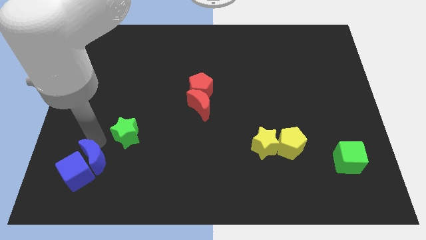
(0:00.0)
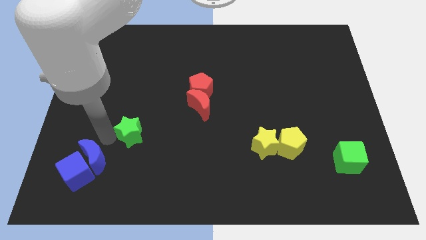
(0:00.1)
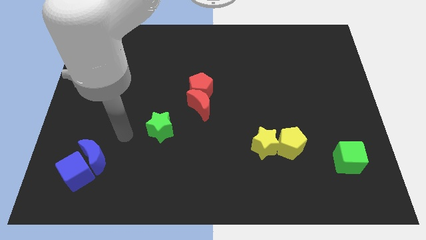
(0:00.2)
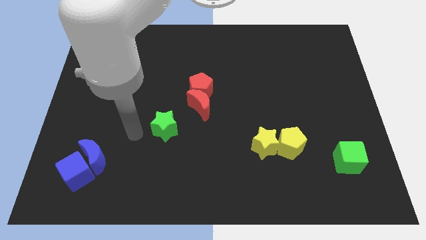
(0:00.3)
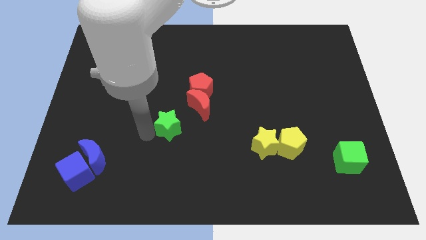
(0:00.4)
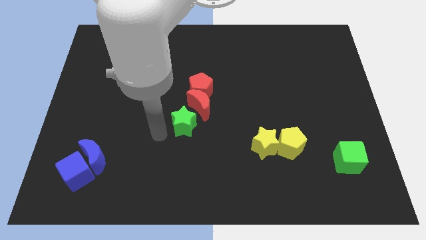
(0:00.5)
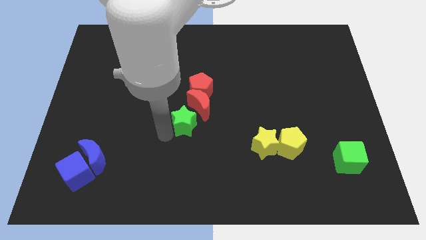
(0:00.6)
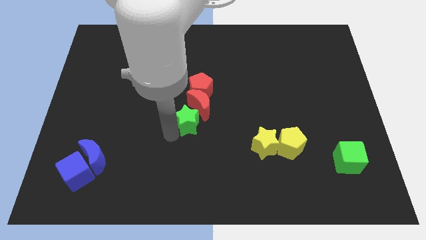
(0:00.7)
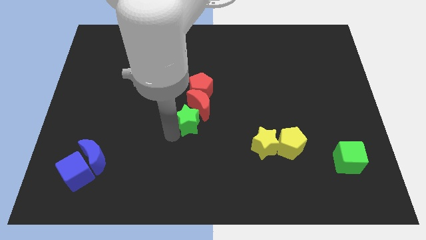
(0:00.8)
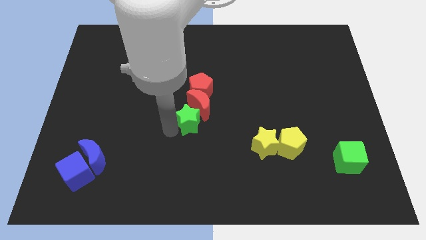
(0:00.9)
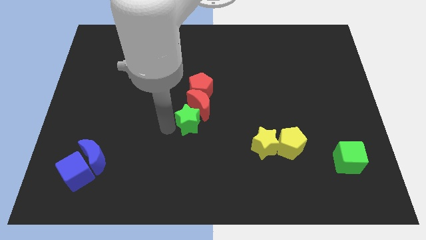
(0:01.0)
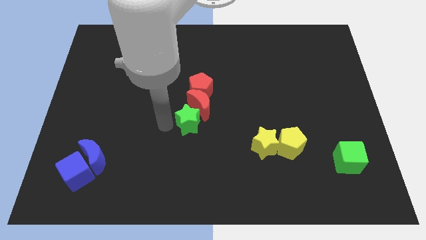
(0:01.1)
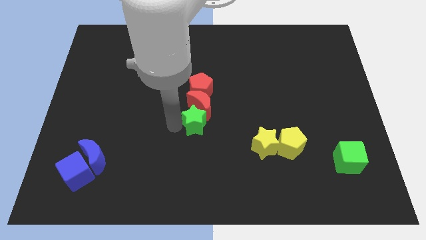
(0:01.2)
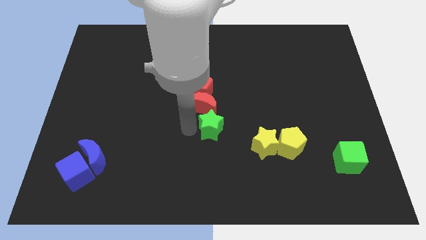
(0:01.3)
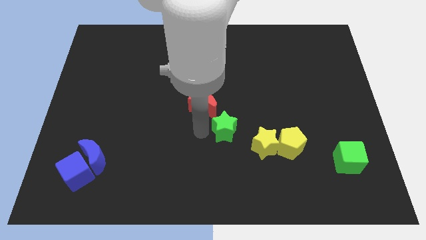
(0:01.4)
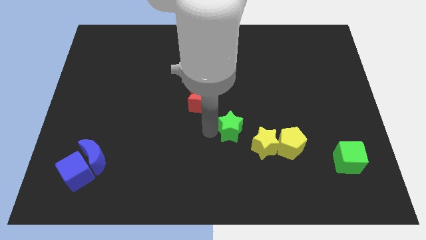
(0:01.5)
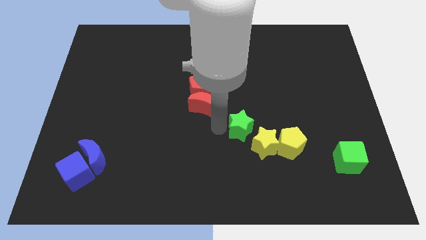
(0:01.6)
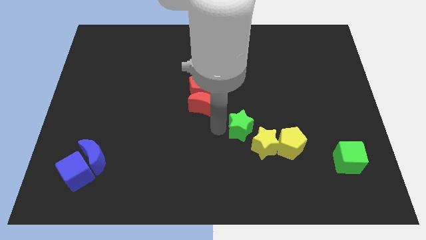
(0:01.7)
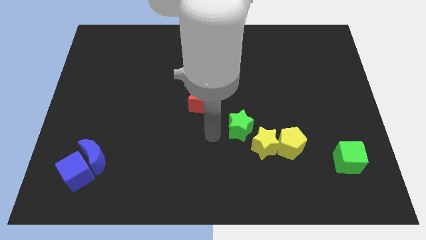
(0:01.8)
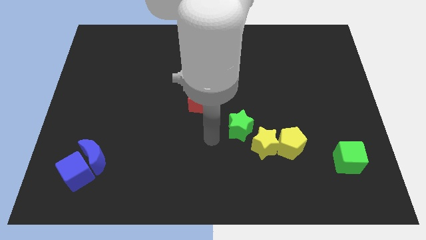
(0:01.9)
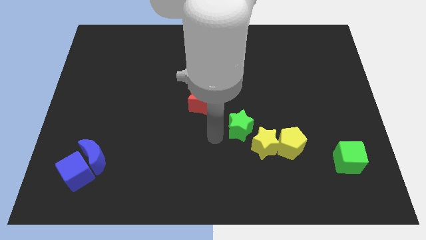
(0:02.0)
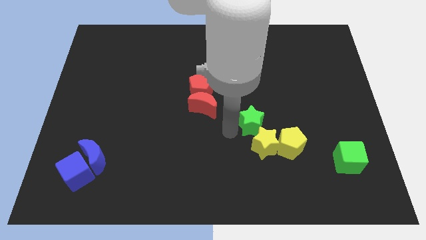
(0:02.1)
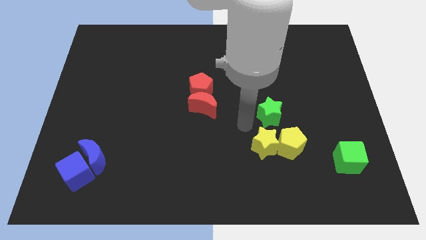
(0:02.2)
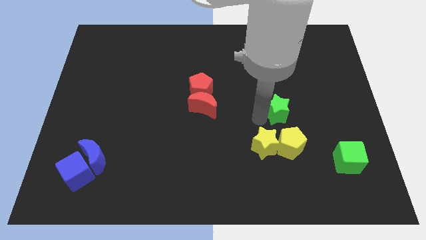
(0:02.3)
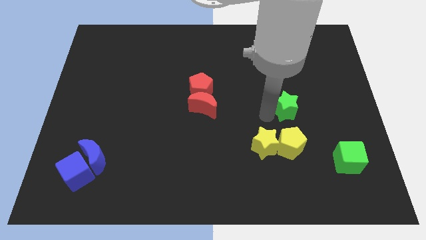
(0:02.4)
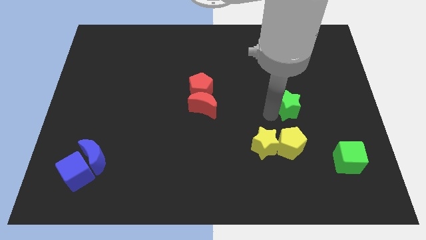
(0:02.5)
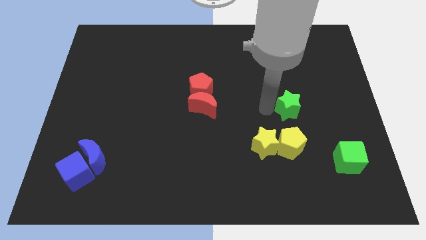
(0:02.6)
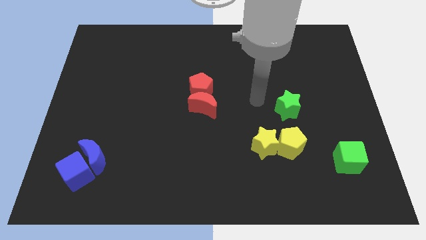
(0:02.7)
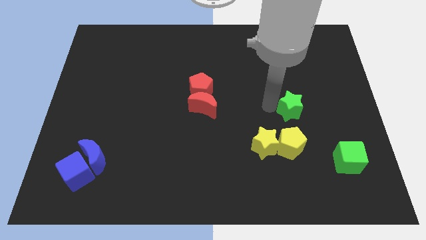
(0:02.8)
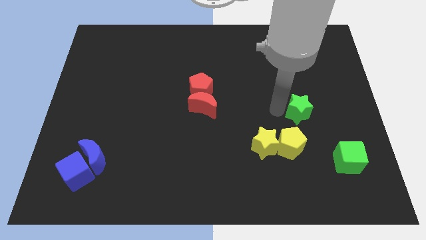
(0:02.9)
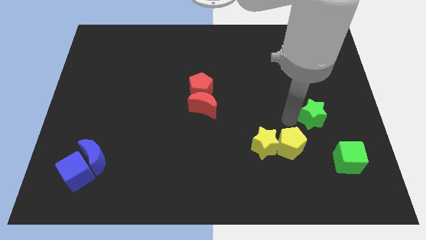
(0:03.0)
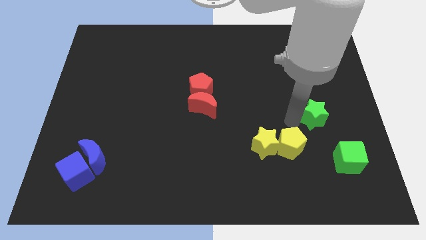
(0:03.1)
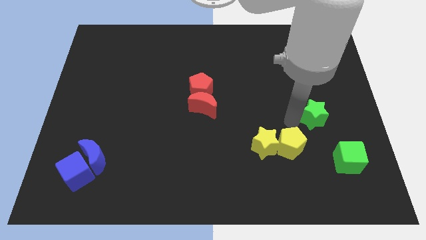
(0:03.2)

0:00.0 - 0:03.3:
move the green star to the top right diagonal of the yellow pentagon

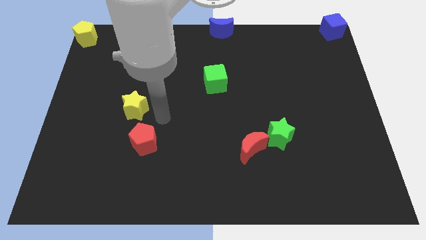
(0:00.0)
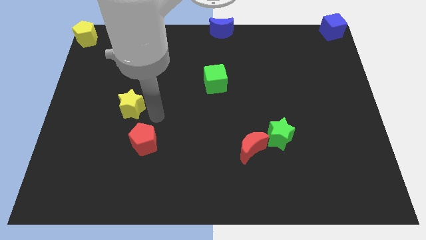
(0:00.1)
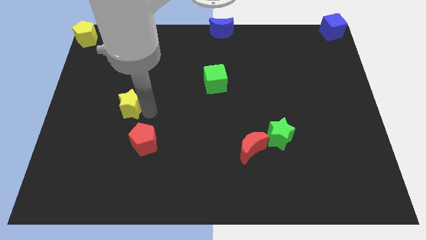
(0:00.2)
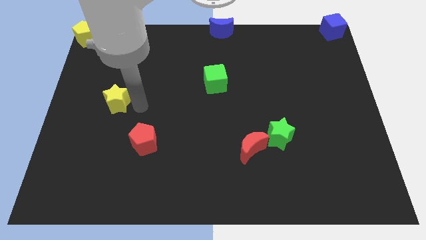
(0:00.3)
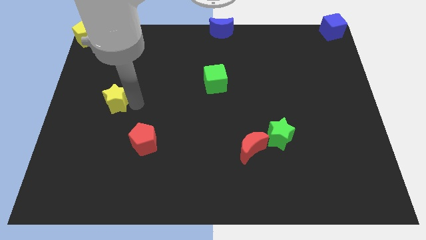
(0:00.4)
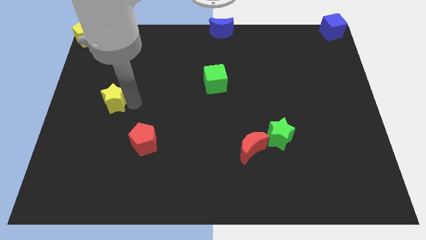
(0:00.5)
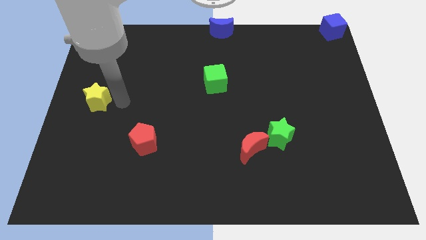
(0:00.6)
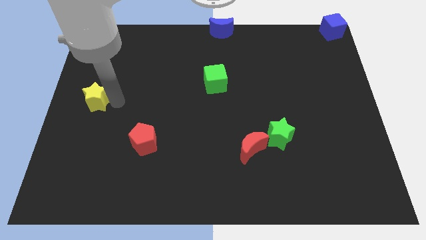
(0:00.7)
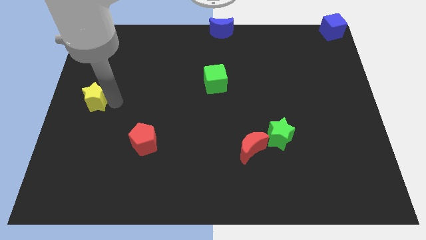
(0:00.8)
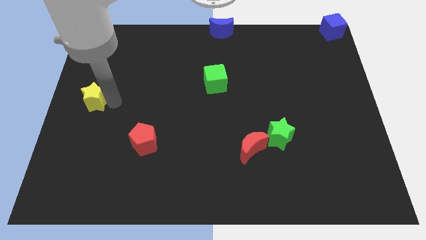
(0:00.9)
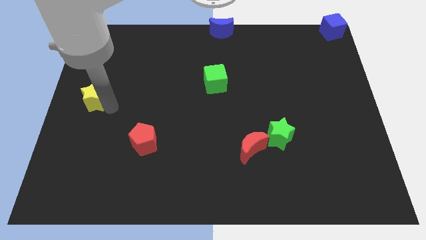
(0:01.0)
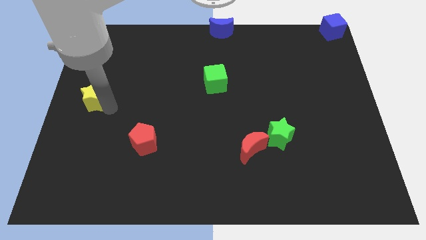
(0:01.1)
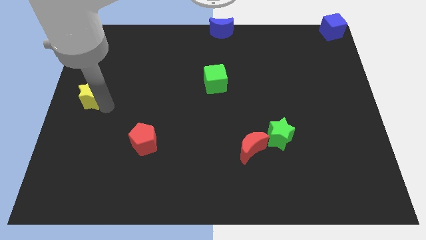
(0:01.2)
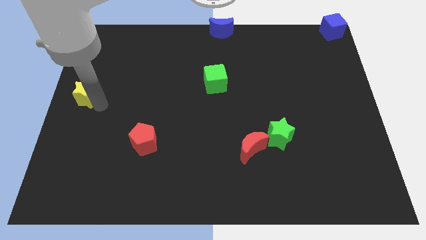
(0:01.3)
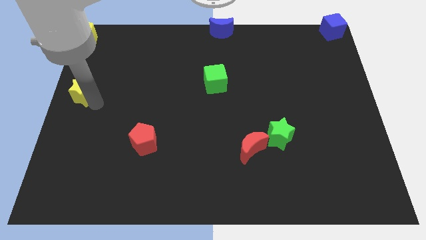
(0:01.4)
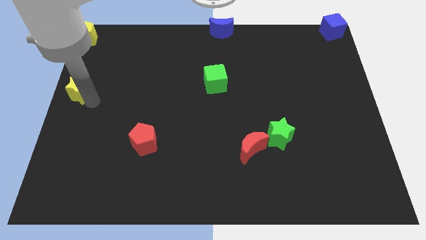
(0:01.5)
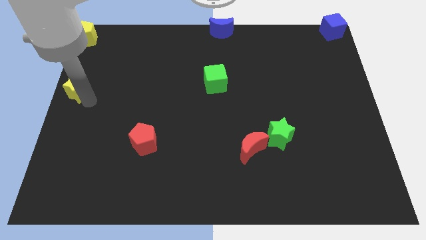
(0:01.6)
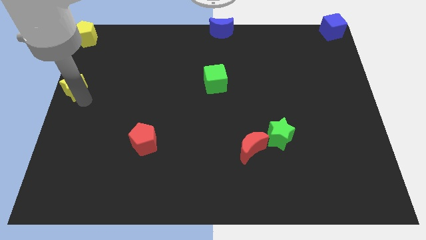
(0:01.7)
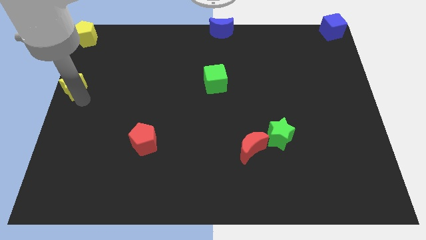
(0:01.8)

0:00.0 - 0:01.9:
place the yellow star below the yellow pentagon

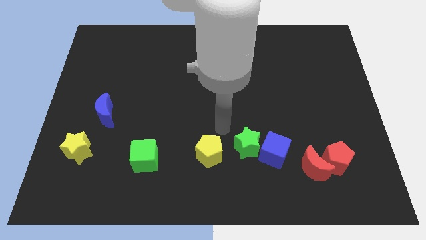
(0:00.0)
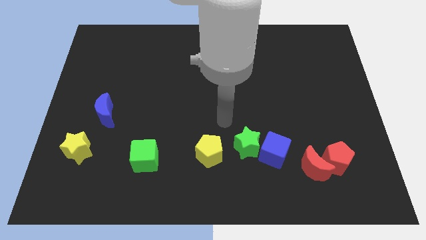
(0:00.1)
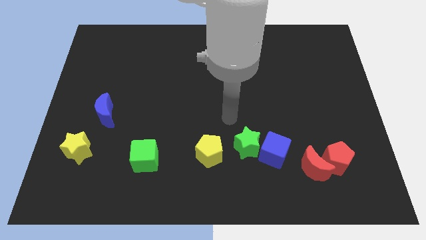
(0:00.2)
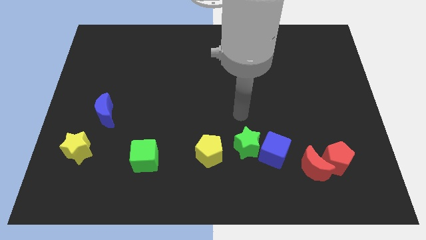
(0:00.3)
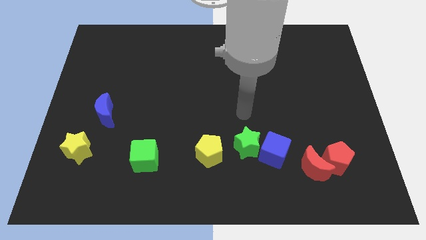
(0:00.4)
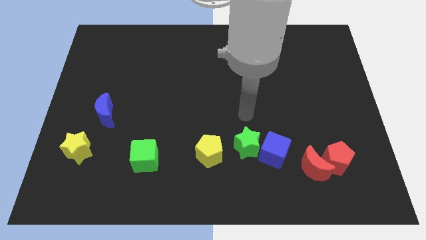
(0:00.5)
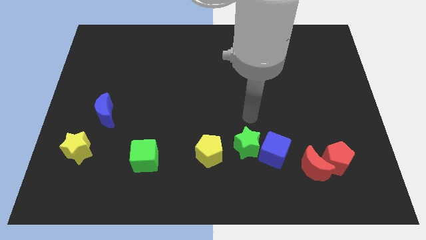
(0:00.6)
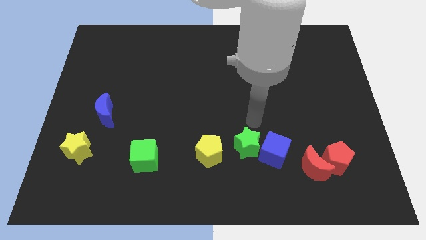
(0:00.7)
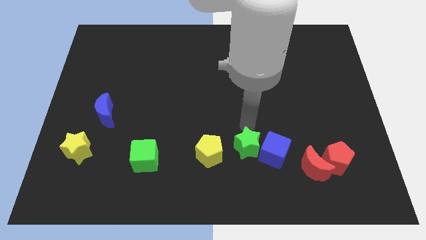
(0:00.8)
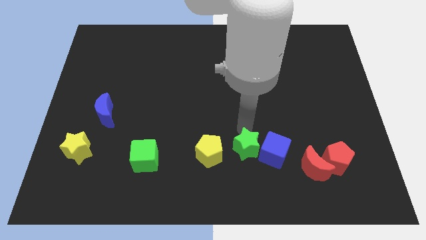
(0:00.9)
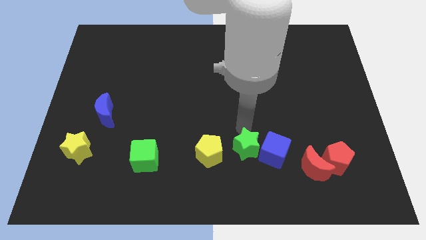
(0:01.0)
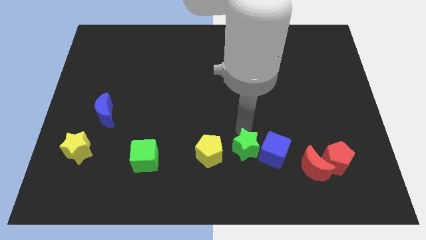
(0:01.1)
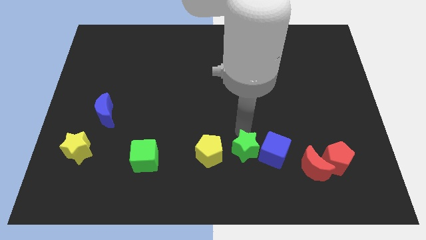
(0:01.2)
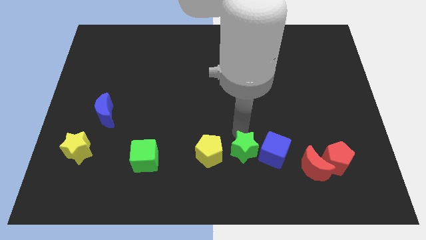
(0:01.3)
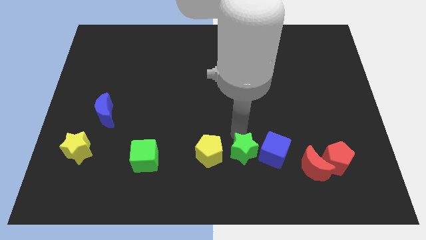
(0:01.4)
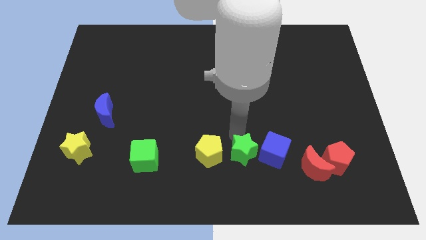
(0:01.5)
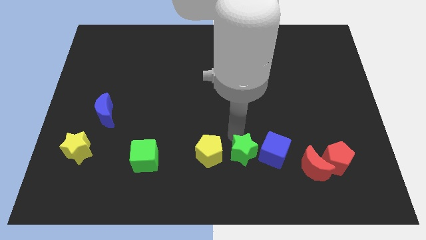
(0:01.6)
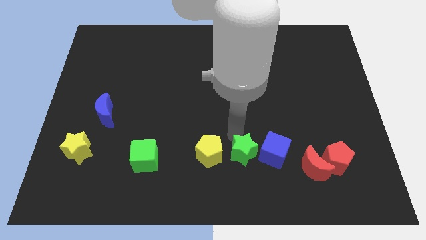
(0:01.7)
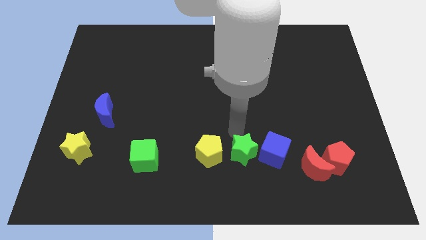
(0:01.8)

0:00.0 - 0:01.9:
slide the green star

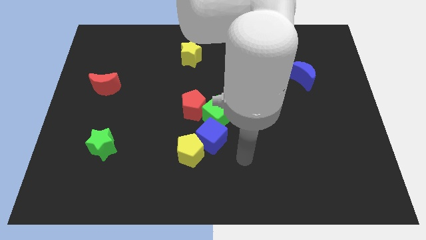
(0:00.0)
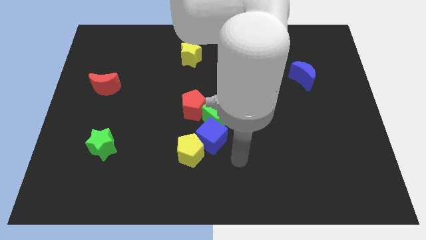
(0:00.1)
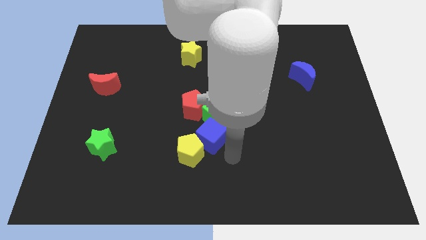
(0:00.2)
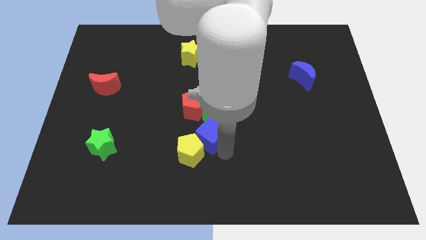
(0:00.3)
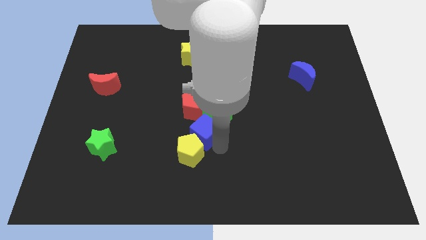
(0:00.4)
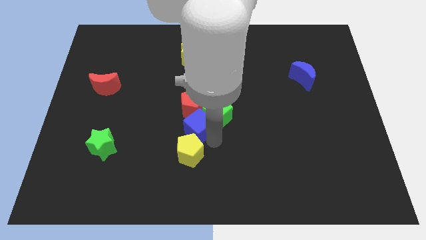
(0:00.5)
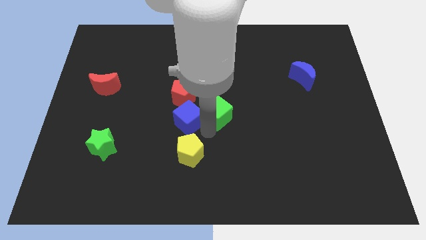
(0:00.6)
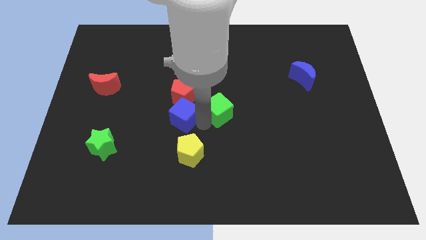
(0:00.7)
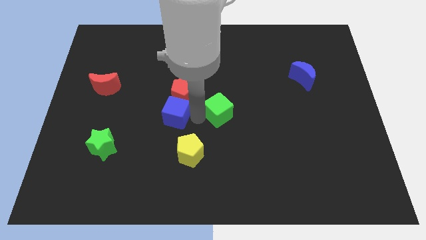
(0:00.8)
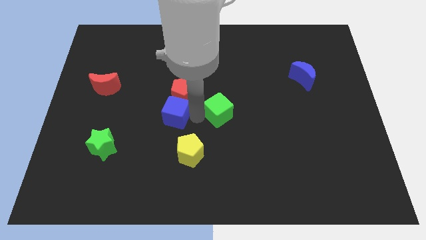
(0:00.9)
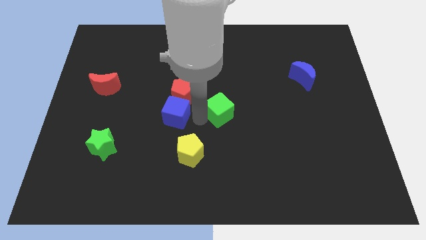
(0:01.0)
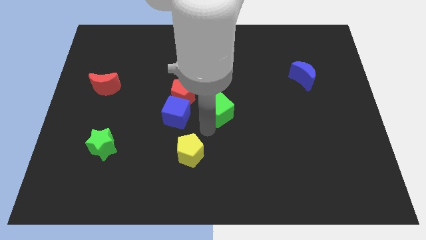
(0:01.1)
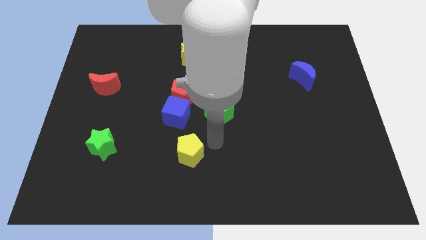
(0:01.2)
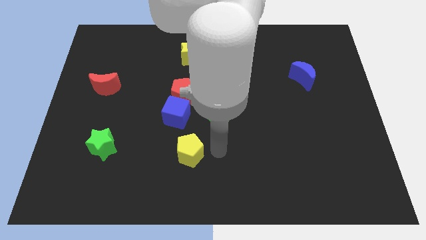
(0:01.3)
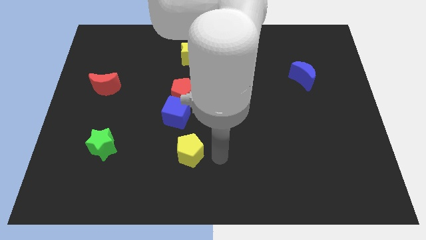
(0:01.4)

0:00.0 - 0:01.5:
place the blue cube to the bottom of the red pentagon

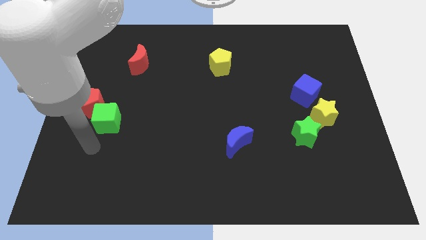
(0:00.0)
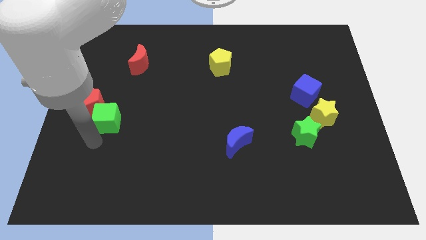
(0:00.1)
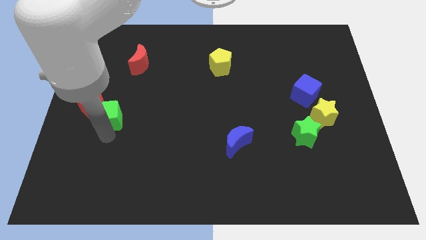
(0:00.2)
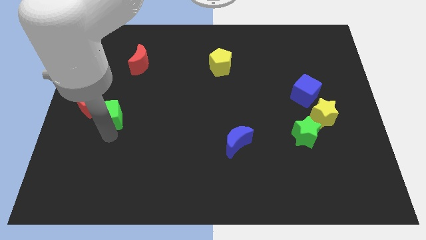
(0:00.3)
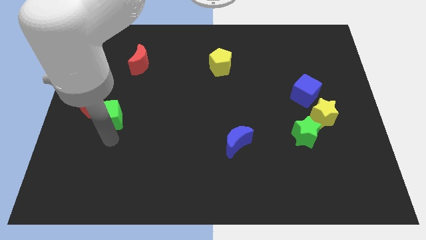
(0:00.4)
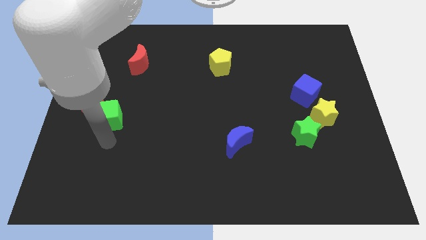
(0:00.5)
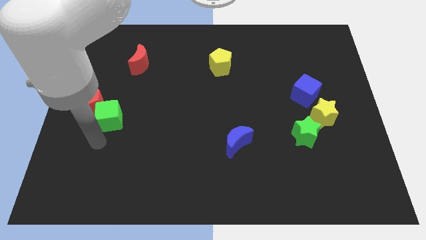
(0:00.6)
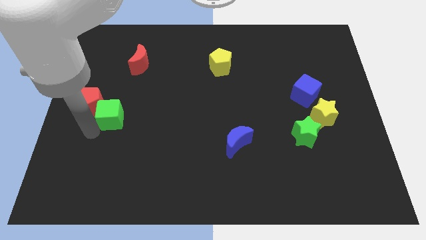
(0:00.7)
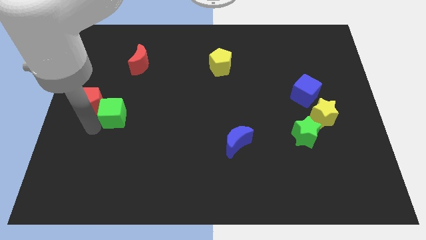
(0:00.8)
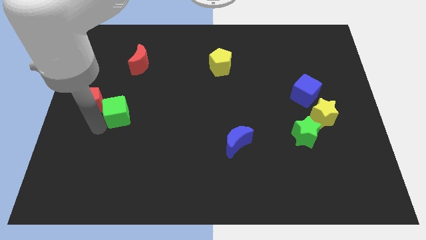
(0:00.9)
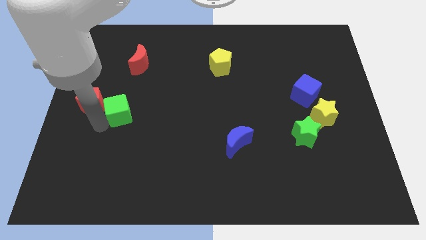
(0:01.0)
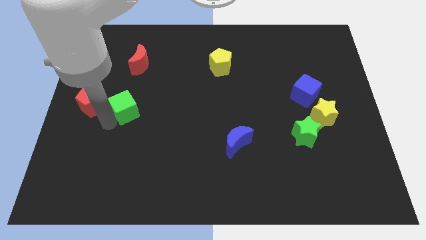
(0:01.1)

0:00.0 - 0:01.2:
move green cube slightly to the top
